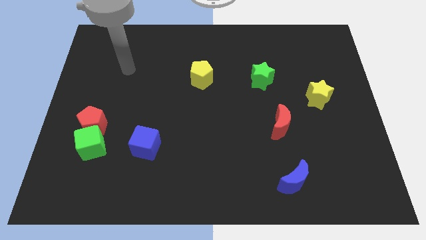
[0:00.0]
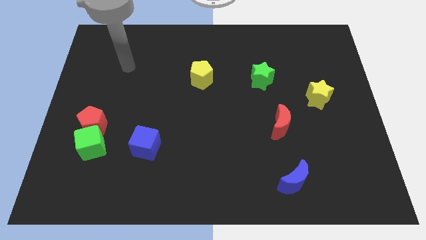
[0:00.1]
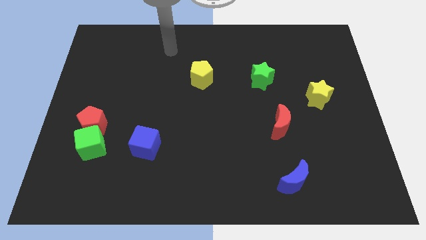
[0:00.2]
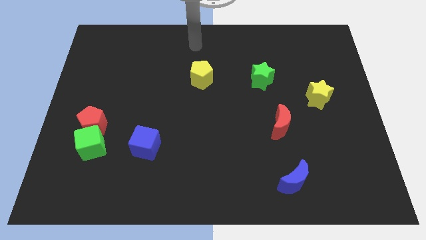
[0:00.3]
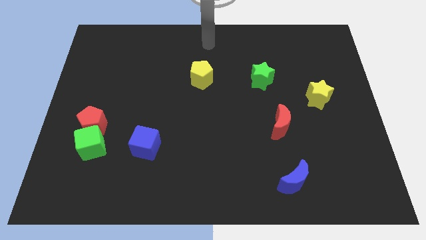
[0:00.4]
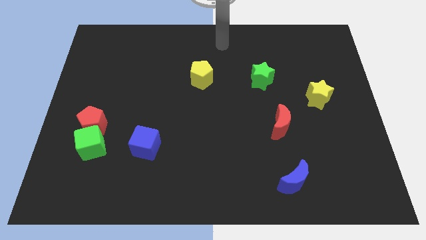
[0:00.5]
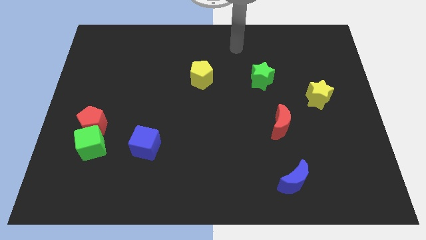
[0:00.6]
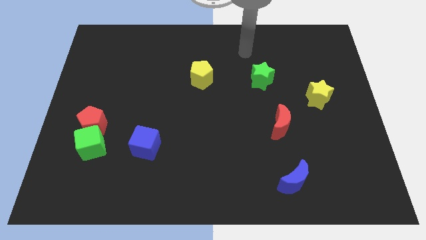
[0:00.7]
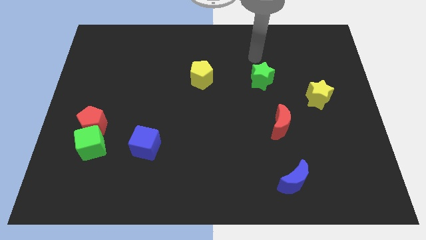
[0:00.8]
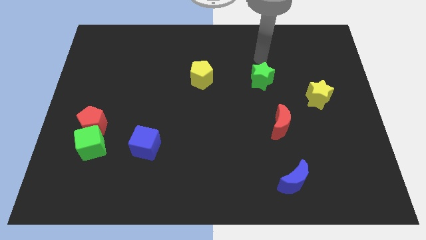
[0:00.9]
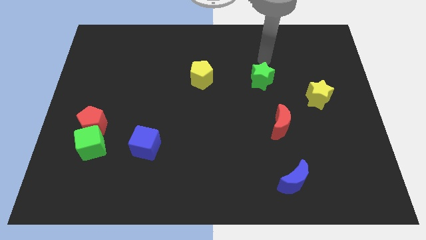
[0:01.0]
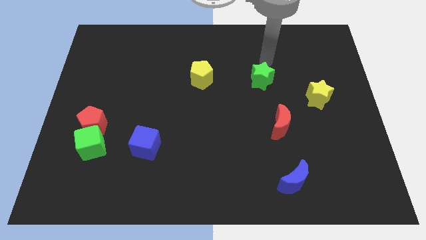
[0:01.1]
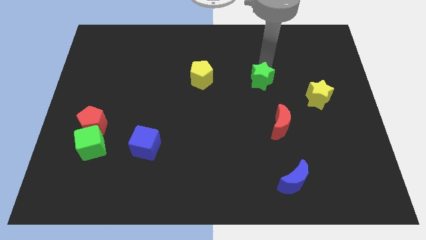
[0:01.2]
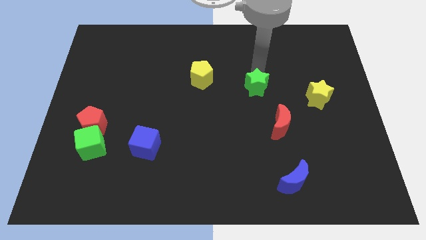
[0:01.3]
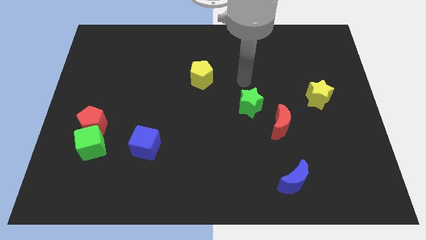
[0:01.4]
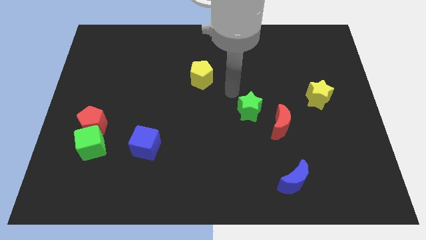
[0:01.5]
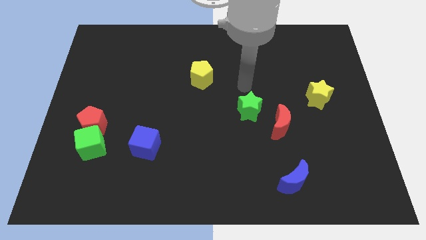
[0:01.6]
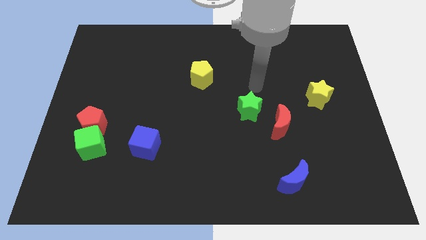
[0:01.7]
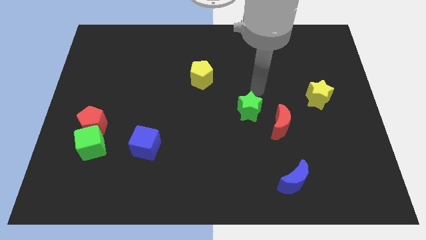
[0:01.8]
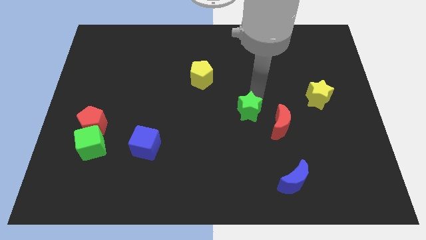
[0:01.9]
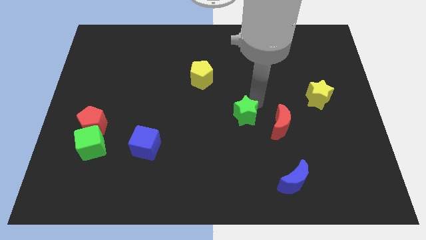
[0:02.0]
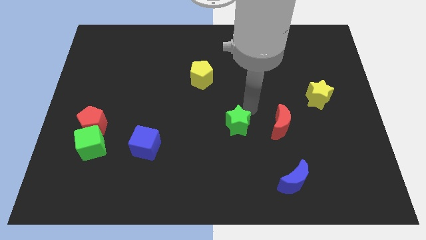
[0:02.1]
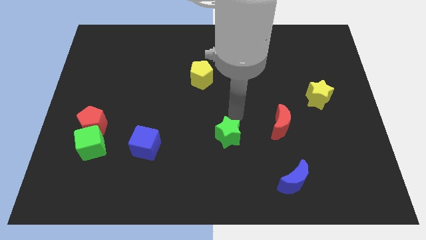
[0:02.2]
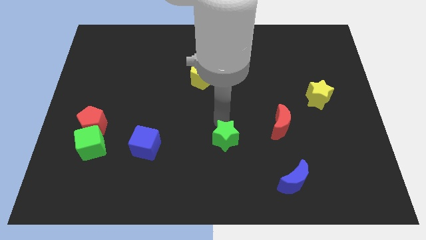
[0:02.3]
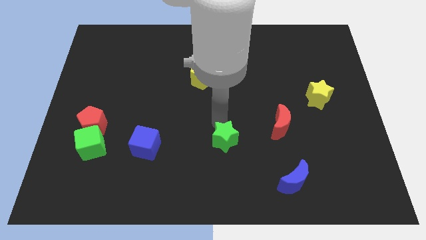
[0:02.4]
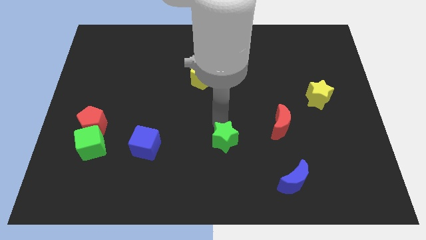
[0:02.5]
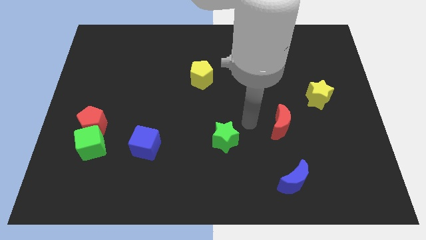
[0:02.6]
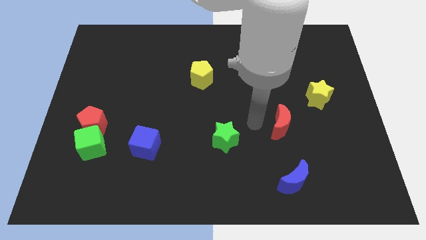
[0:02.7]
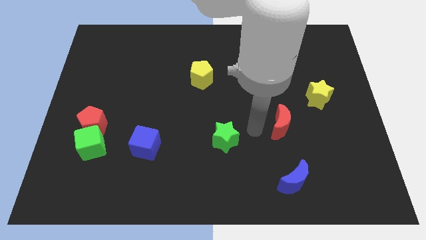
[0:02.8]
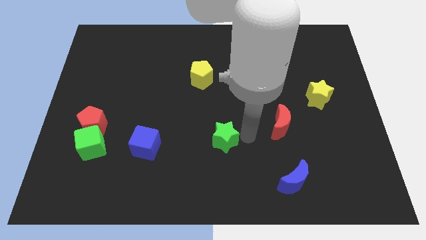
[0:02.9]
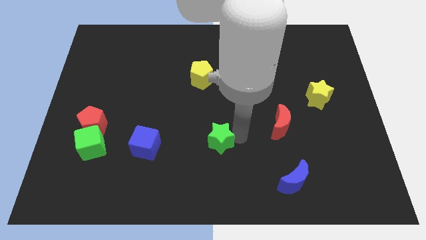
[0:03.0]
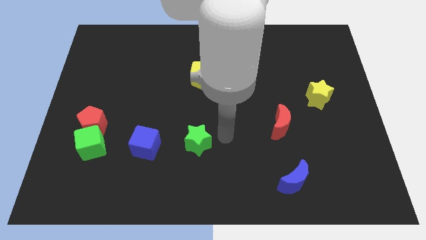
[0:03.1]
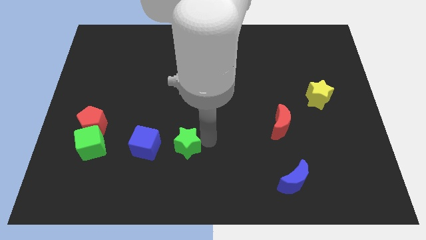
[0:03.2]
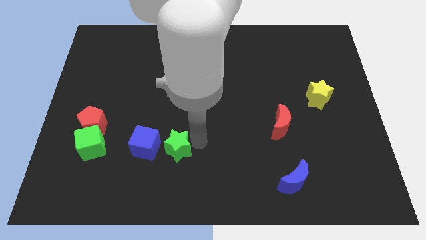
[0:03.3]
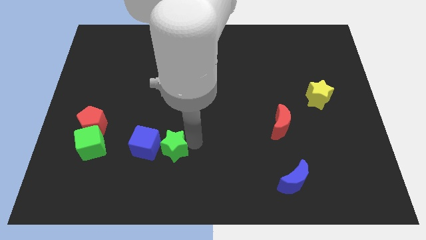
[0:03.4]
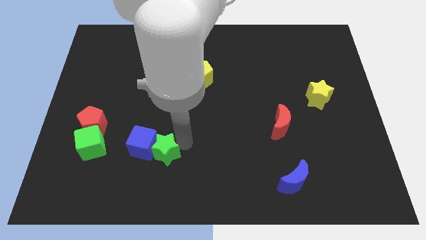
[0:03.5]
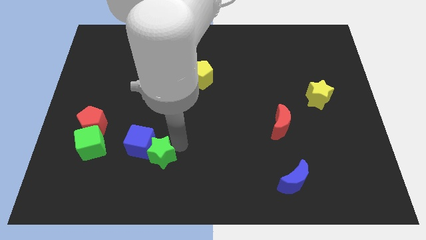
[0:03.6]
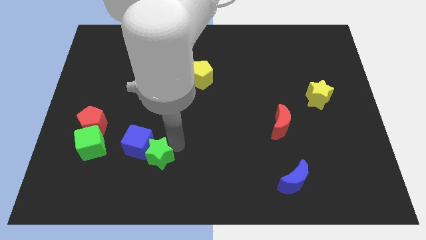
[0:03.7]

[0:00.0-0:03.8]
slide the green star towards the blue cube

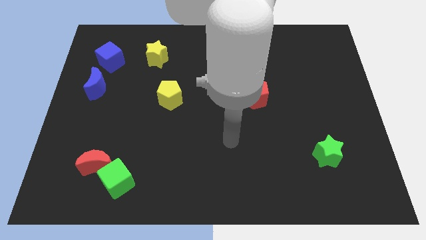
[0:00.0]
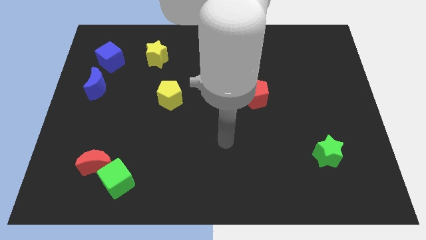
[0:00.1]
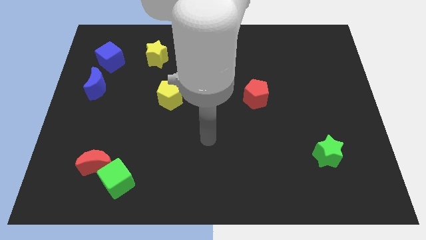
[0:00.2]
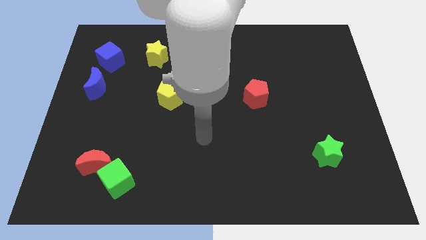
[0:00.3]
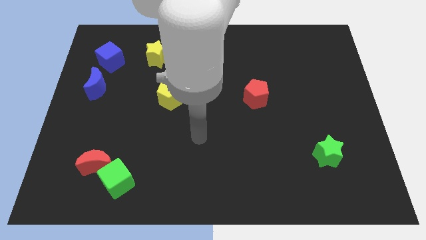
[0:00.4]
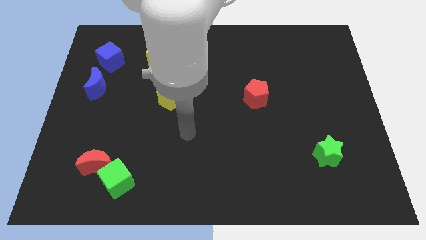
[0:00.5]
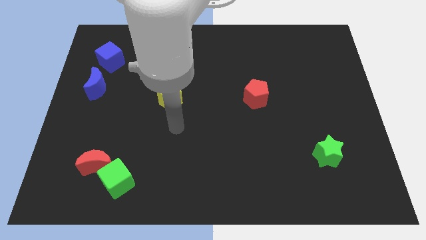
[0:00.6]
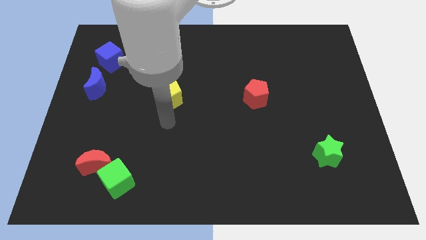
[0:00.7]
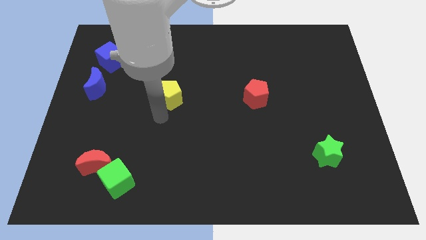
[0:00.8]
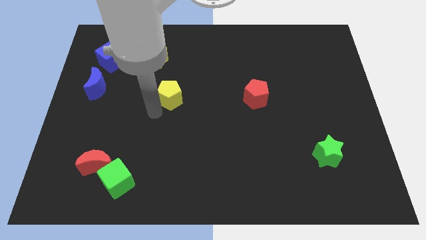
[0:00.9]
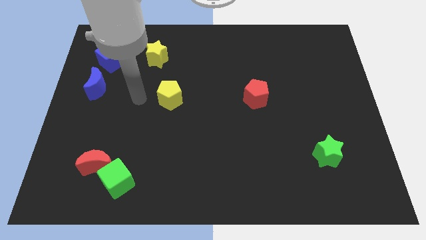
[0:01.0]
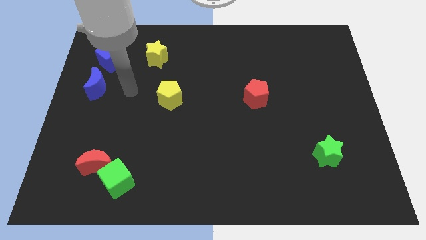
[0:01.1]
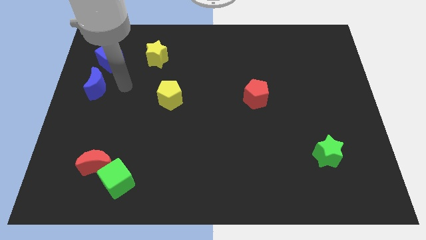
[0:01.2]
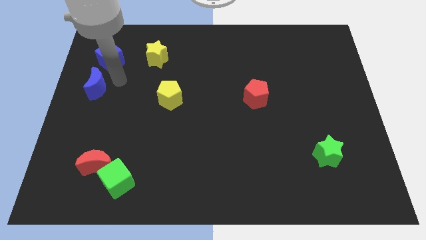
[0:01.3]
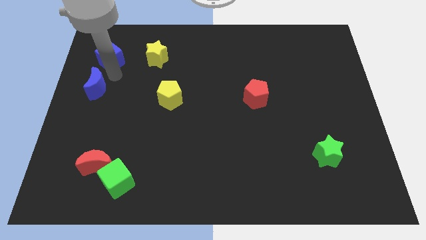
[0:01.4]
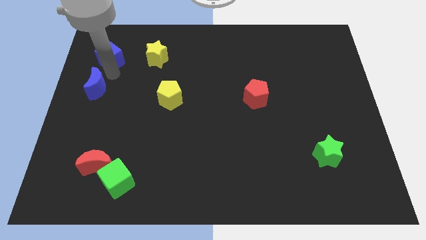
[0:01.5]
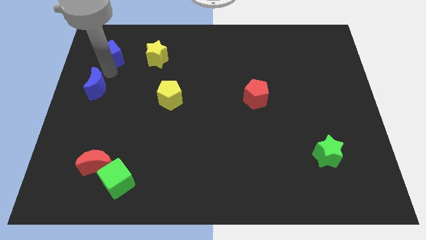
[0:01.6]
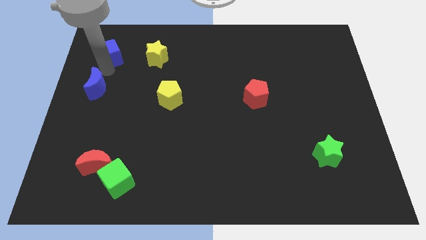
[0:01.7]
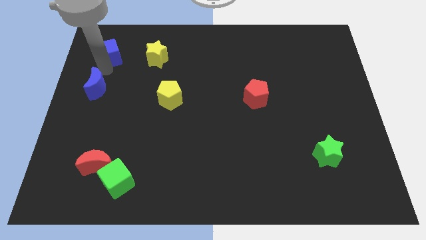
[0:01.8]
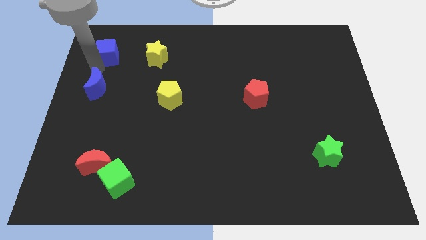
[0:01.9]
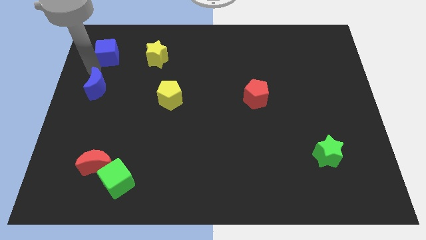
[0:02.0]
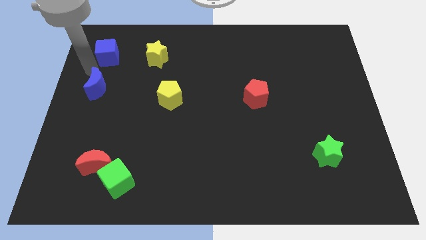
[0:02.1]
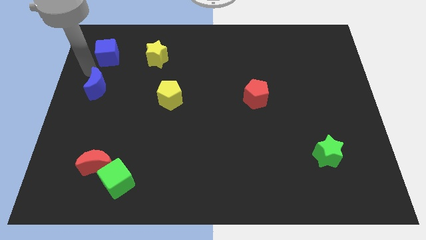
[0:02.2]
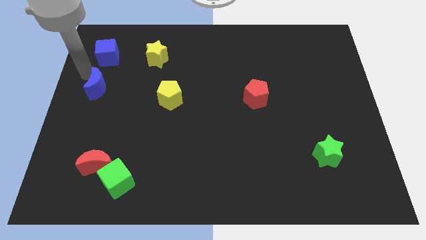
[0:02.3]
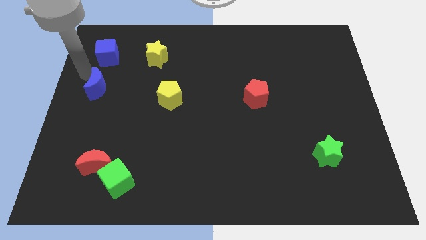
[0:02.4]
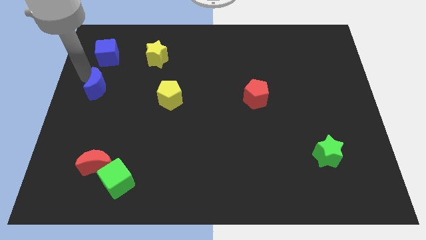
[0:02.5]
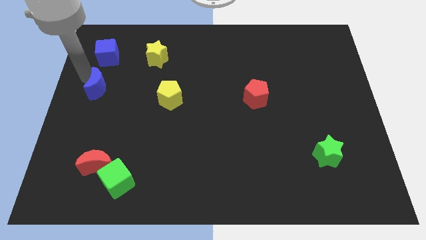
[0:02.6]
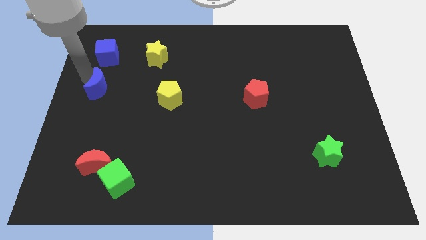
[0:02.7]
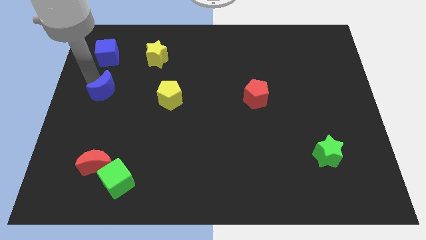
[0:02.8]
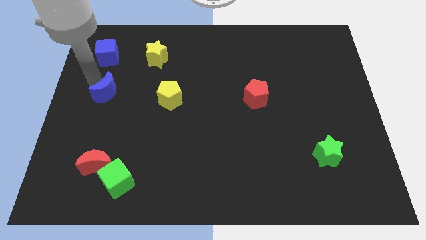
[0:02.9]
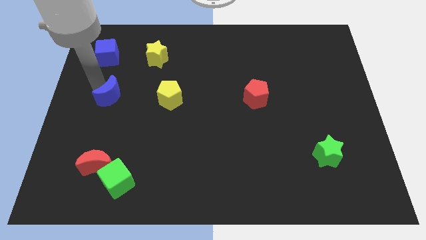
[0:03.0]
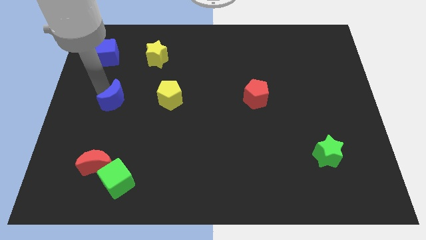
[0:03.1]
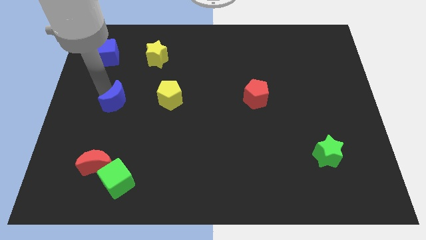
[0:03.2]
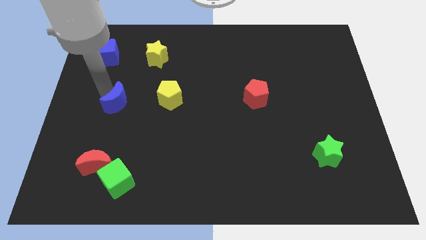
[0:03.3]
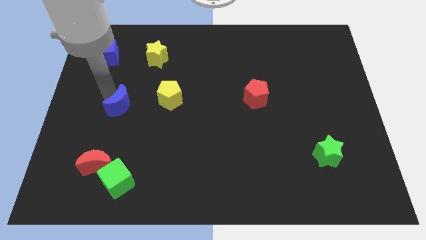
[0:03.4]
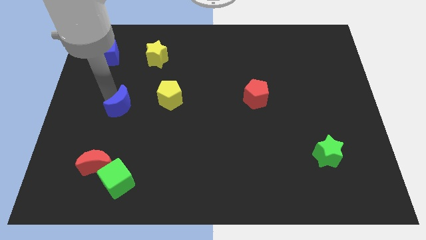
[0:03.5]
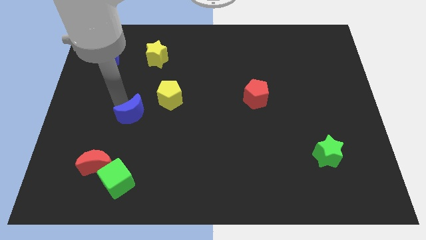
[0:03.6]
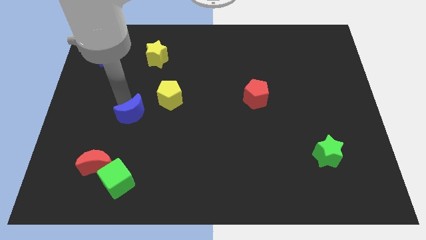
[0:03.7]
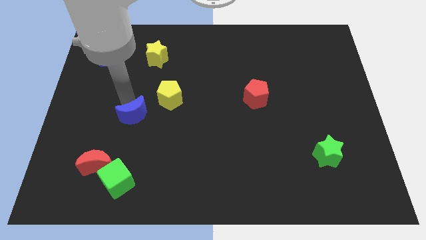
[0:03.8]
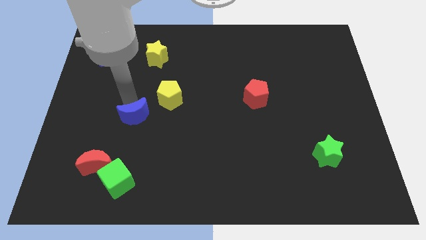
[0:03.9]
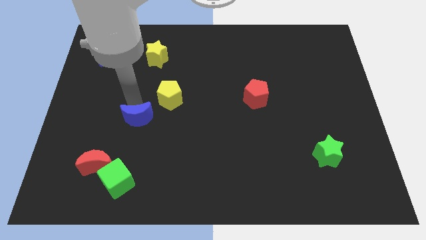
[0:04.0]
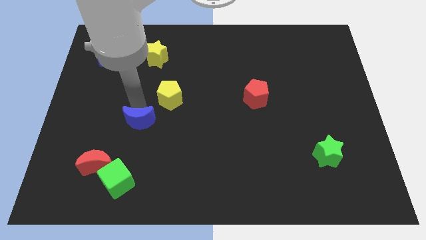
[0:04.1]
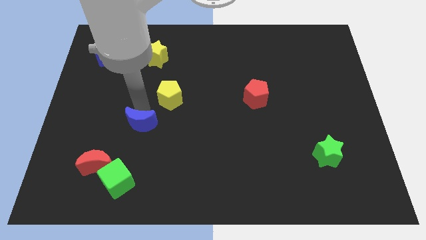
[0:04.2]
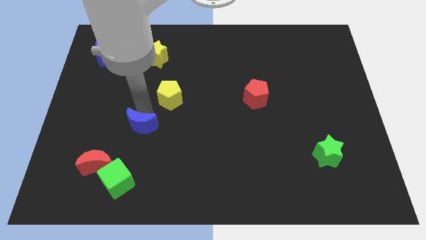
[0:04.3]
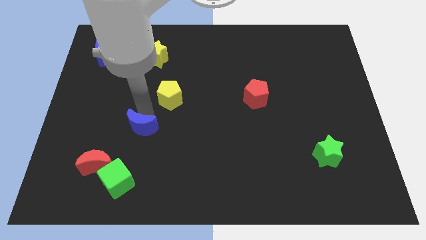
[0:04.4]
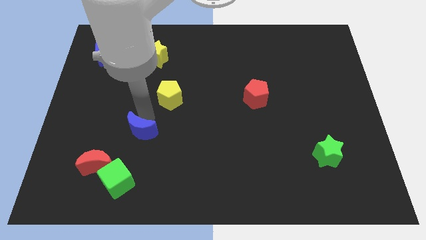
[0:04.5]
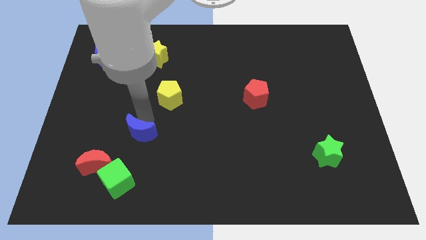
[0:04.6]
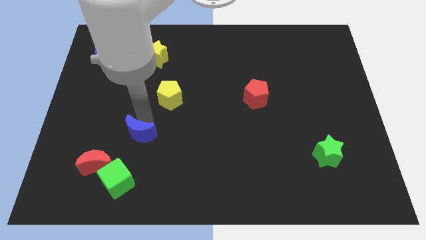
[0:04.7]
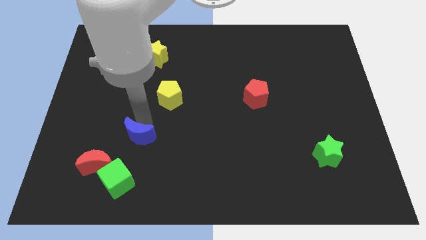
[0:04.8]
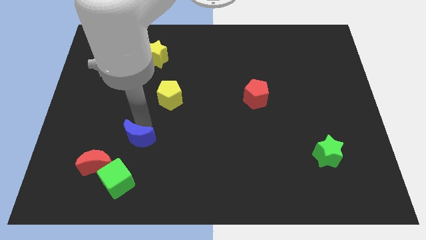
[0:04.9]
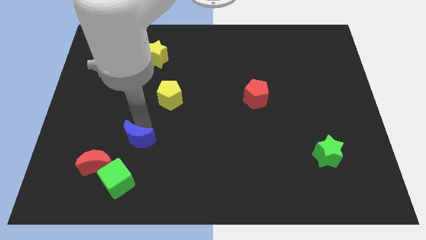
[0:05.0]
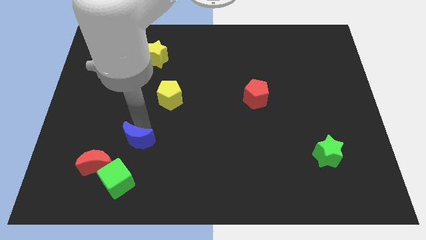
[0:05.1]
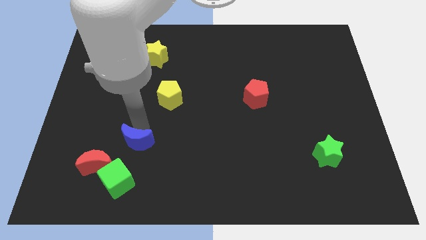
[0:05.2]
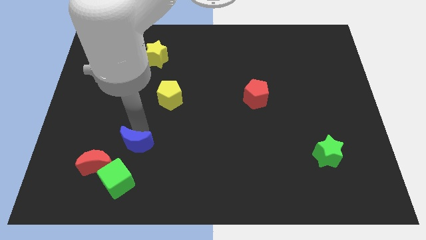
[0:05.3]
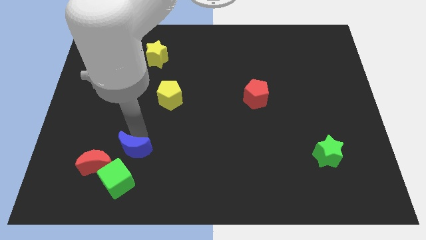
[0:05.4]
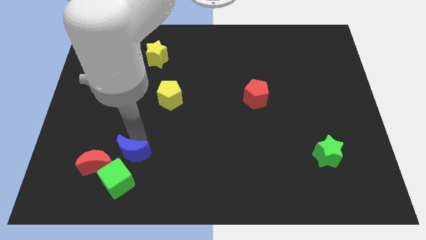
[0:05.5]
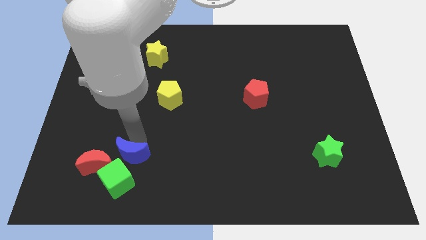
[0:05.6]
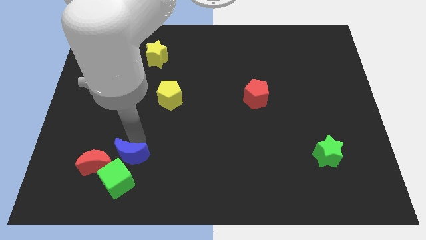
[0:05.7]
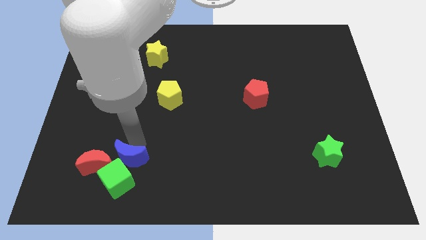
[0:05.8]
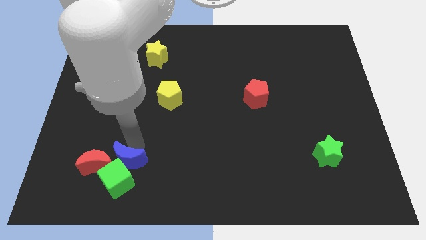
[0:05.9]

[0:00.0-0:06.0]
slide the blue moon next to the green cube
